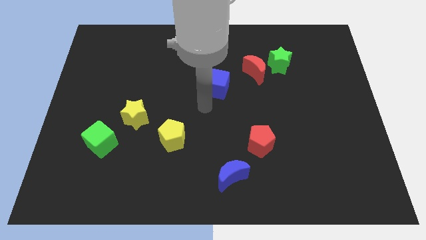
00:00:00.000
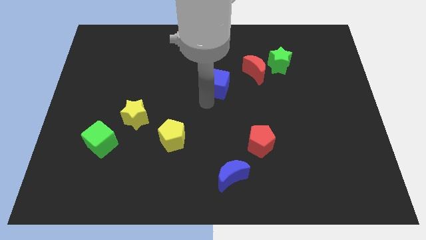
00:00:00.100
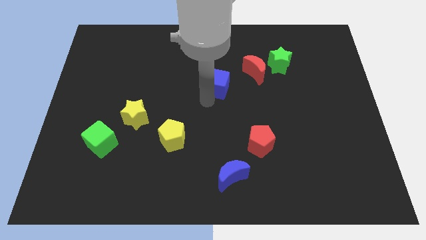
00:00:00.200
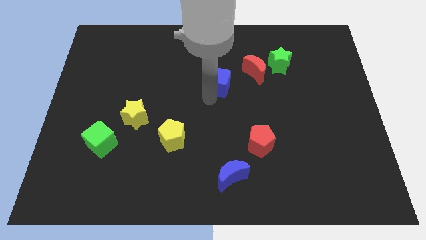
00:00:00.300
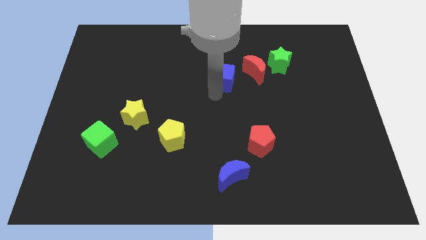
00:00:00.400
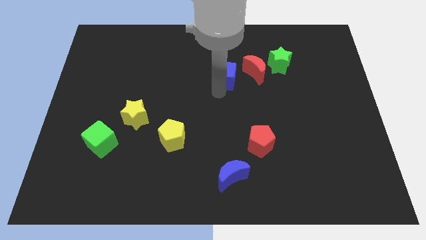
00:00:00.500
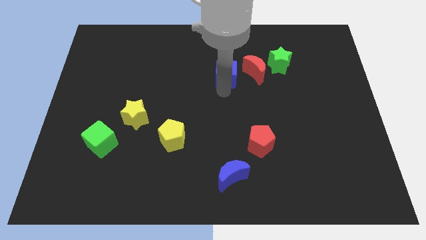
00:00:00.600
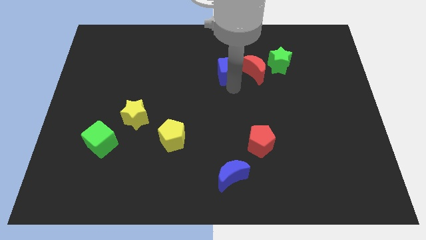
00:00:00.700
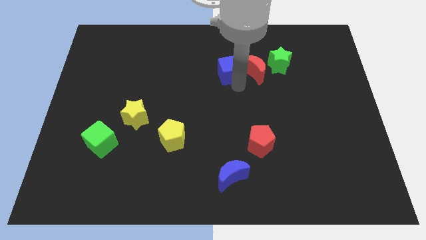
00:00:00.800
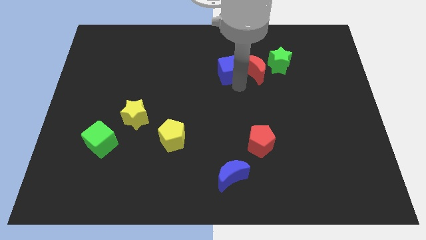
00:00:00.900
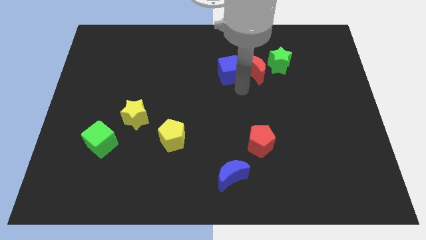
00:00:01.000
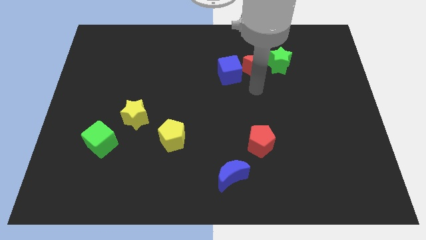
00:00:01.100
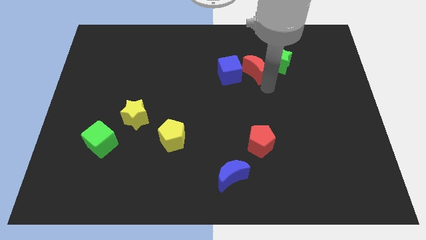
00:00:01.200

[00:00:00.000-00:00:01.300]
move the blue cube to the top left side of the red moon

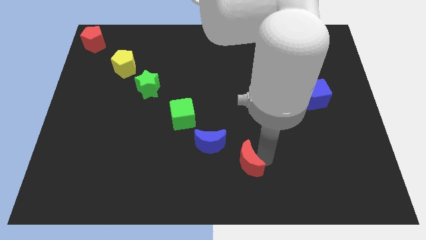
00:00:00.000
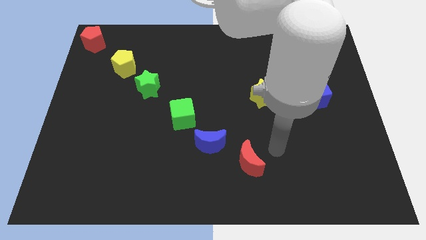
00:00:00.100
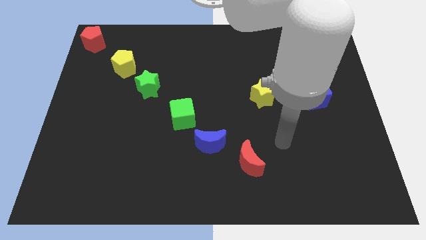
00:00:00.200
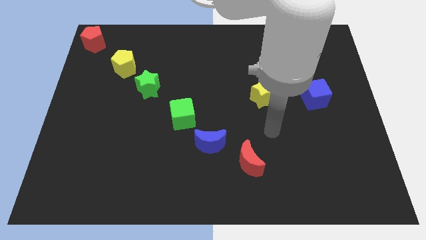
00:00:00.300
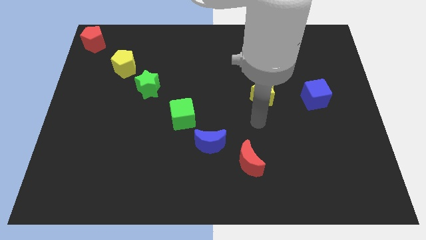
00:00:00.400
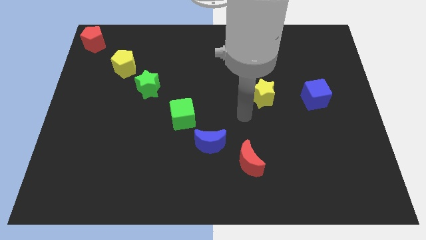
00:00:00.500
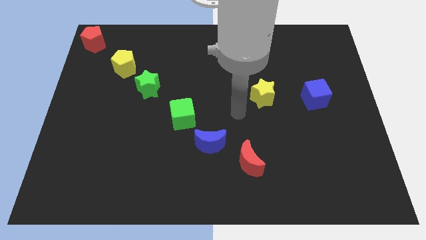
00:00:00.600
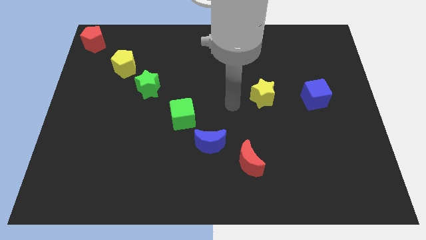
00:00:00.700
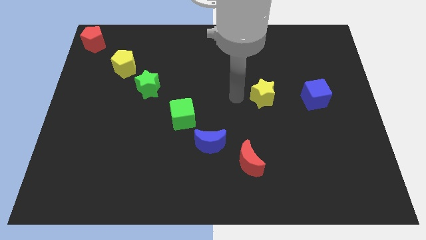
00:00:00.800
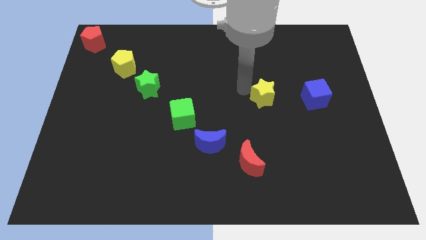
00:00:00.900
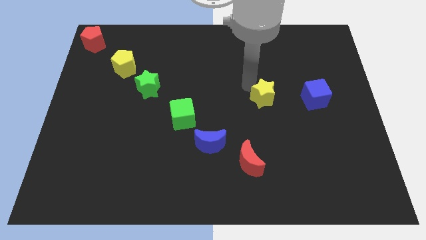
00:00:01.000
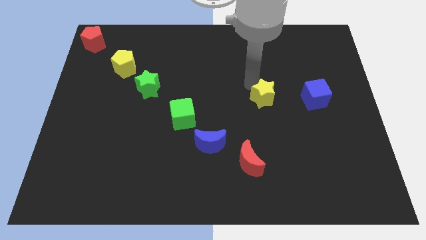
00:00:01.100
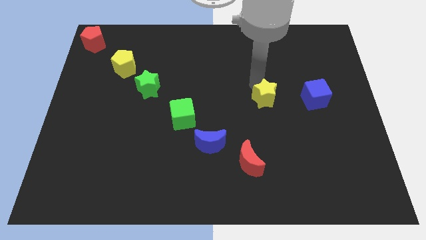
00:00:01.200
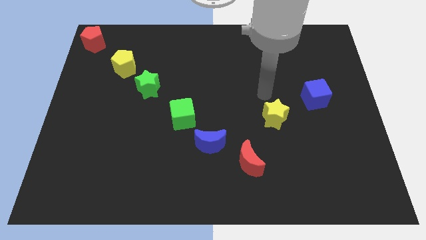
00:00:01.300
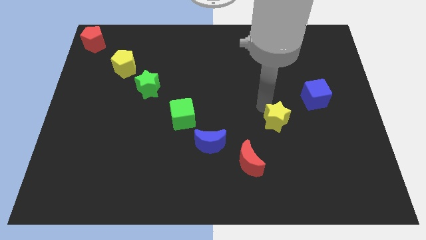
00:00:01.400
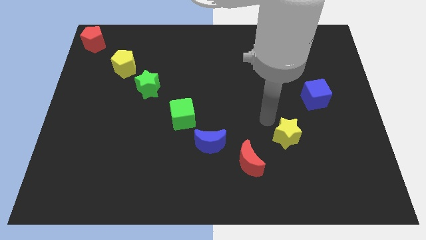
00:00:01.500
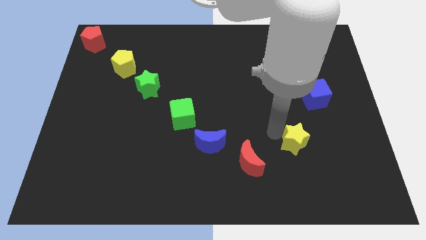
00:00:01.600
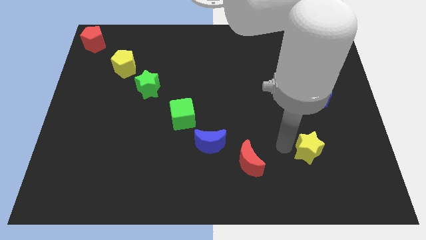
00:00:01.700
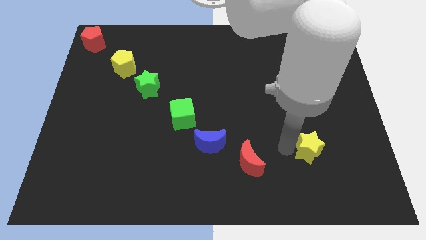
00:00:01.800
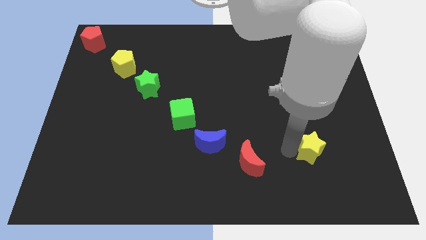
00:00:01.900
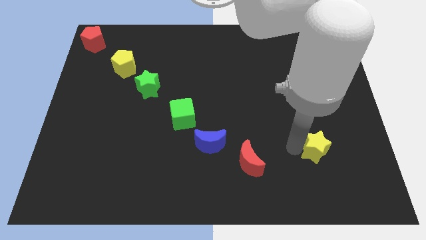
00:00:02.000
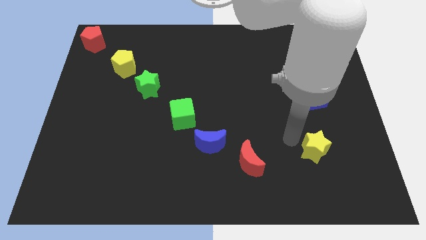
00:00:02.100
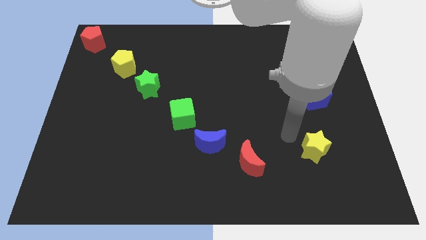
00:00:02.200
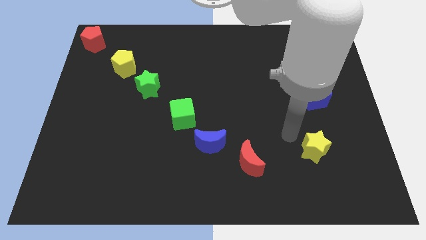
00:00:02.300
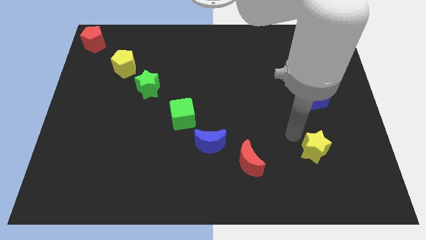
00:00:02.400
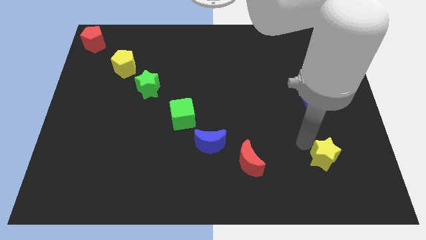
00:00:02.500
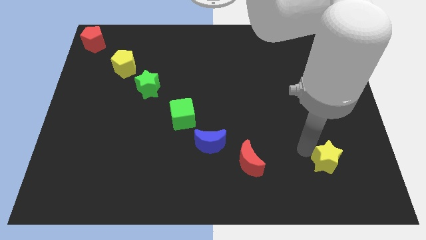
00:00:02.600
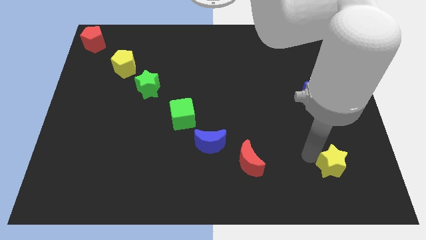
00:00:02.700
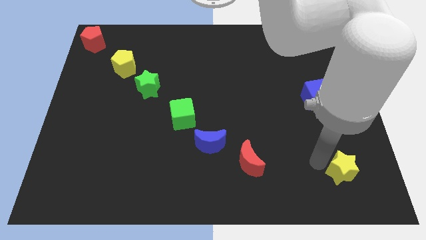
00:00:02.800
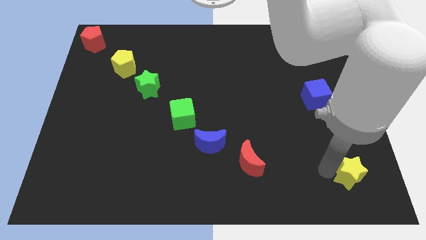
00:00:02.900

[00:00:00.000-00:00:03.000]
push the yellow star to the right of the red crescent

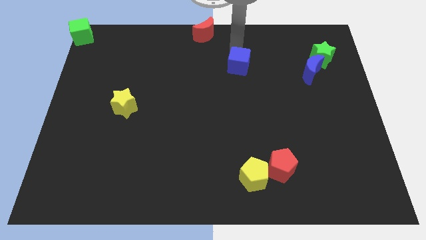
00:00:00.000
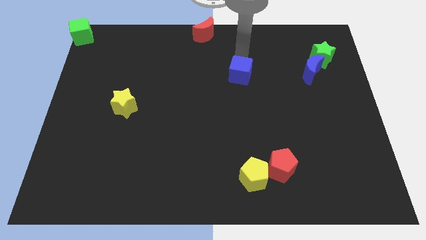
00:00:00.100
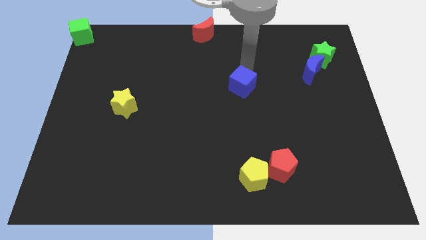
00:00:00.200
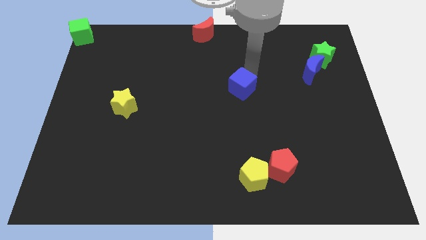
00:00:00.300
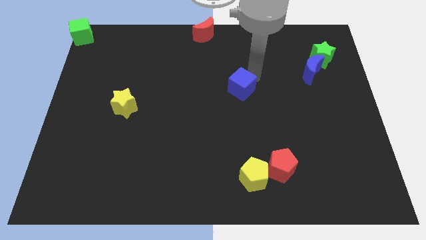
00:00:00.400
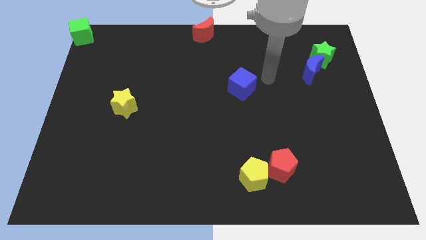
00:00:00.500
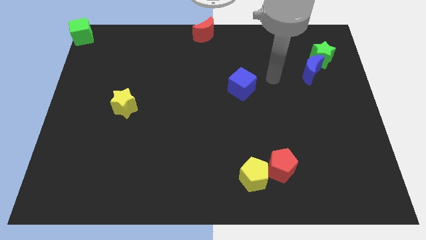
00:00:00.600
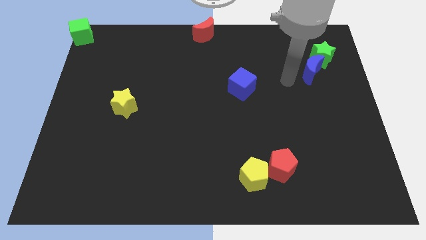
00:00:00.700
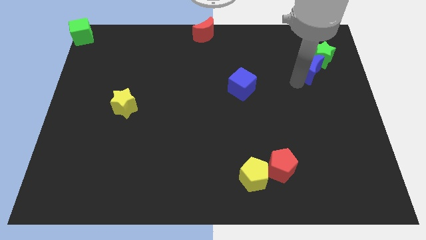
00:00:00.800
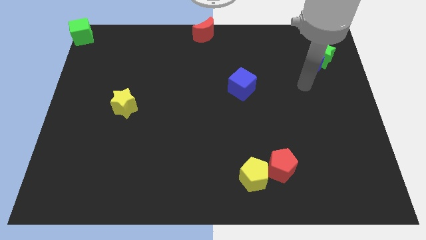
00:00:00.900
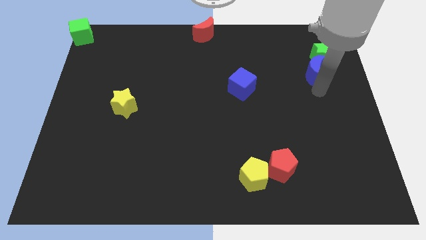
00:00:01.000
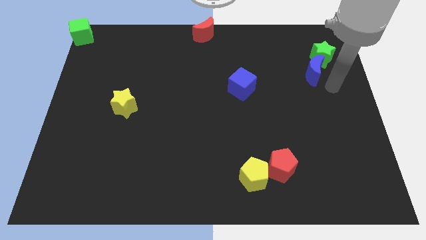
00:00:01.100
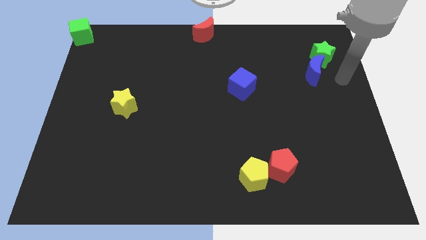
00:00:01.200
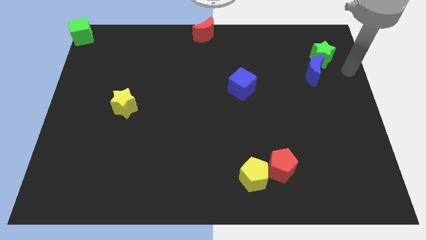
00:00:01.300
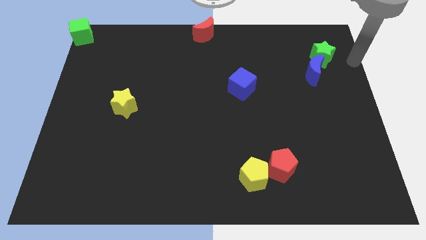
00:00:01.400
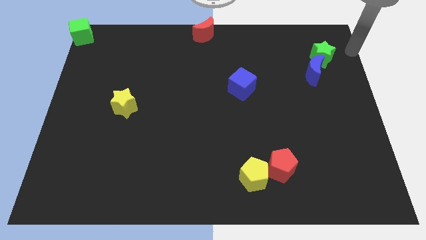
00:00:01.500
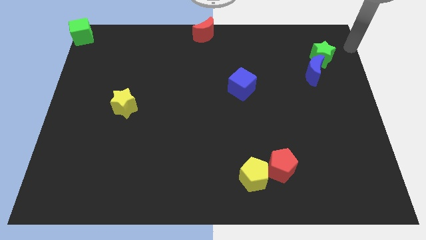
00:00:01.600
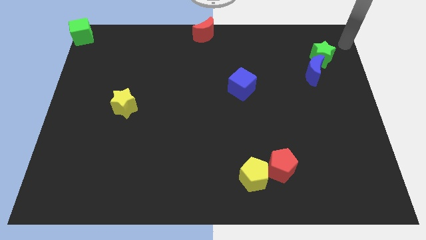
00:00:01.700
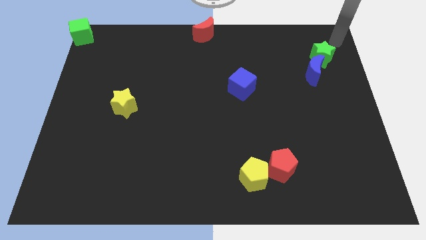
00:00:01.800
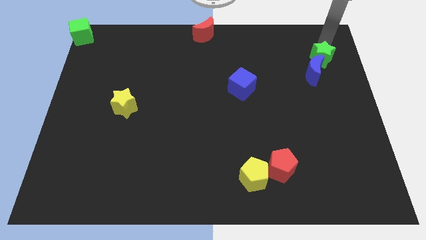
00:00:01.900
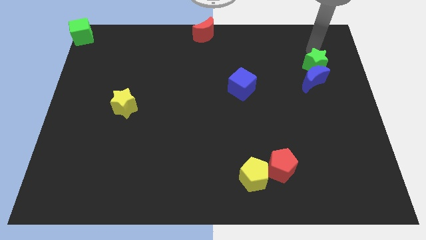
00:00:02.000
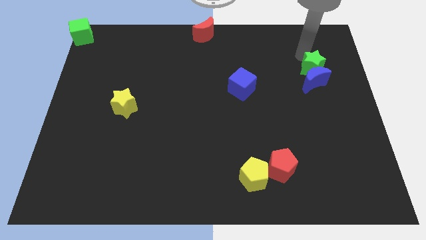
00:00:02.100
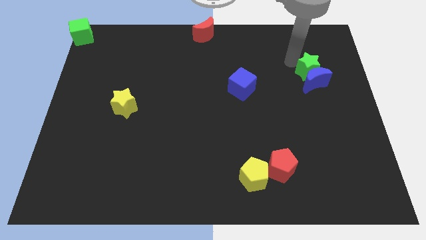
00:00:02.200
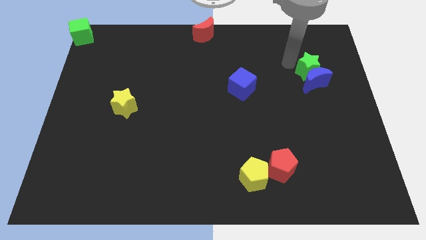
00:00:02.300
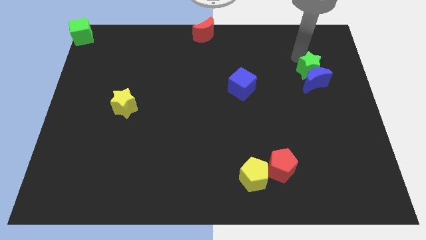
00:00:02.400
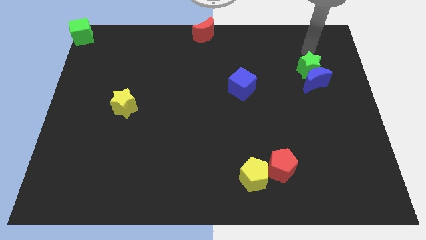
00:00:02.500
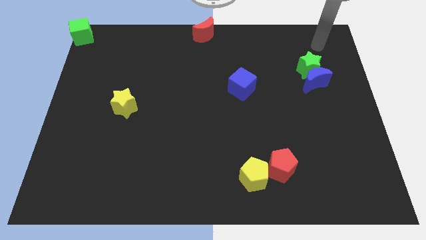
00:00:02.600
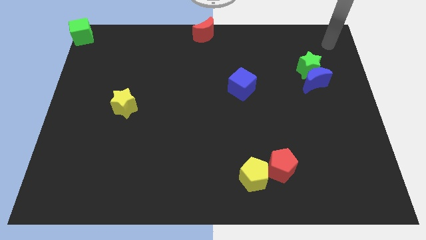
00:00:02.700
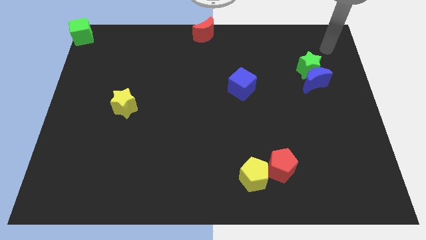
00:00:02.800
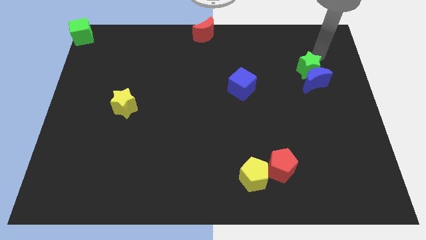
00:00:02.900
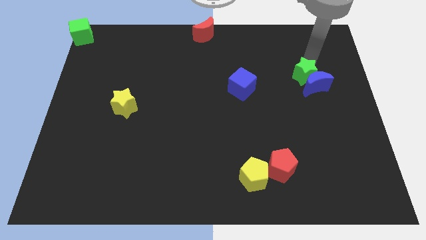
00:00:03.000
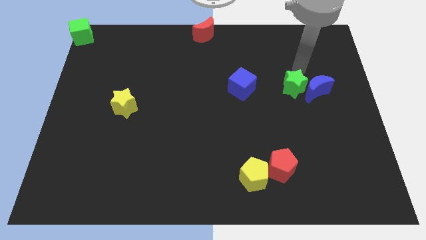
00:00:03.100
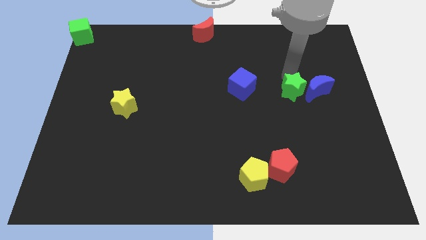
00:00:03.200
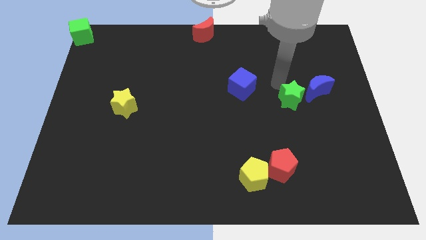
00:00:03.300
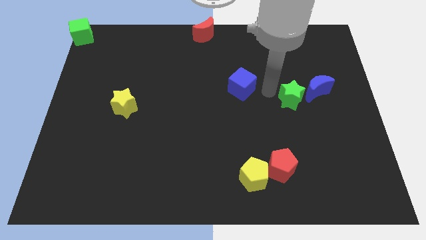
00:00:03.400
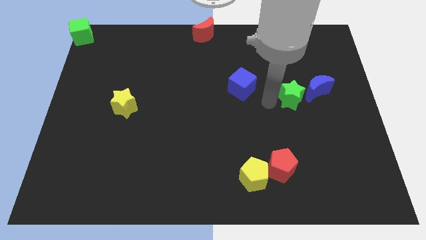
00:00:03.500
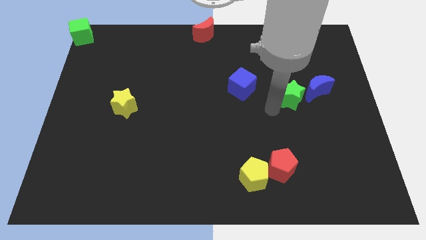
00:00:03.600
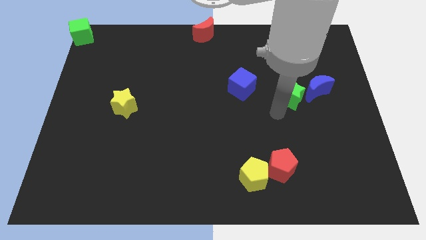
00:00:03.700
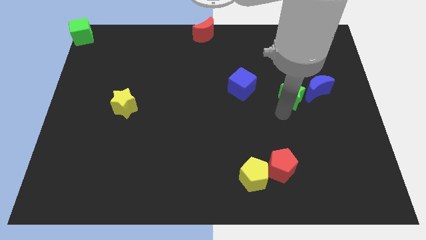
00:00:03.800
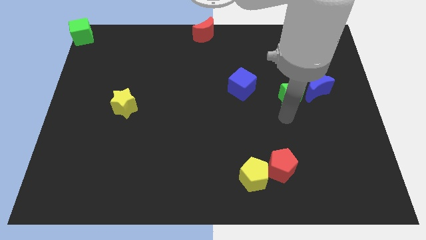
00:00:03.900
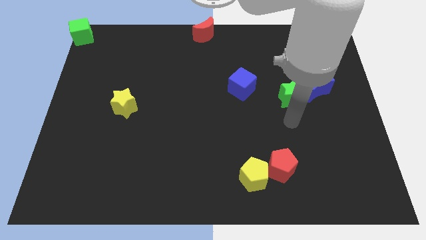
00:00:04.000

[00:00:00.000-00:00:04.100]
move the green star and blue moon slightly down

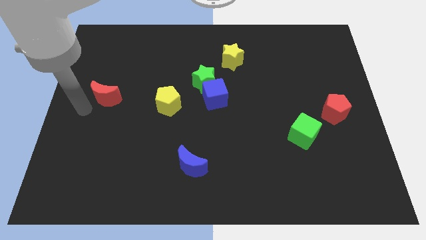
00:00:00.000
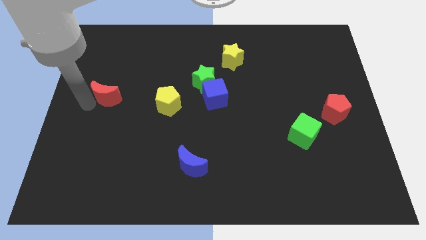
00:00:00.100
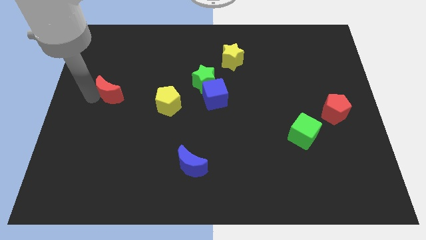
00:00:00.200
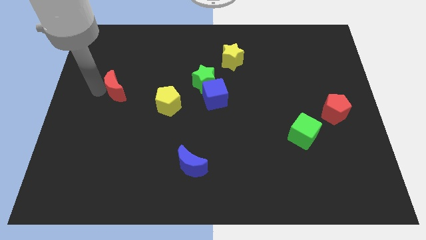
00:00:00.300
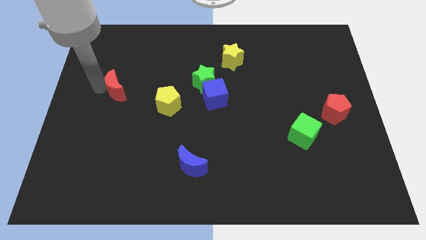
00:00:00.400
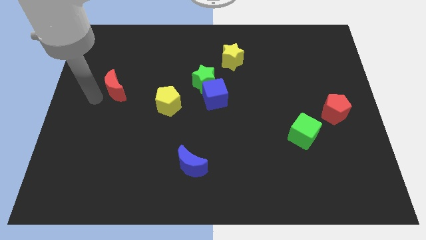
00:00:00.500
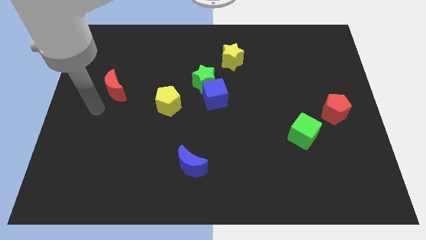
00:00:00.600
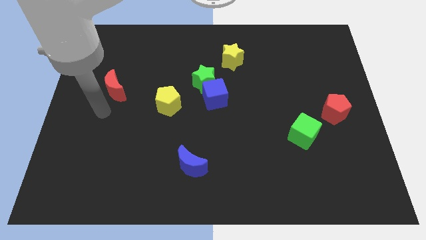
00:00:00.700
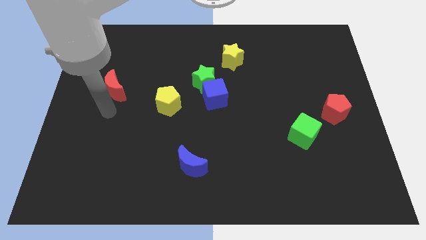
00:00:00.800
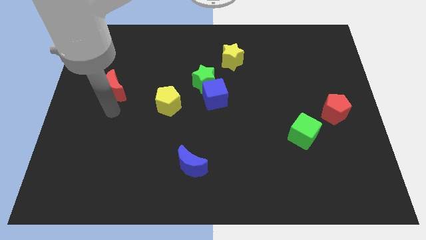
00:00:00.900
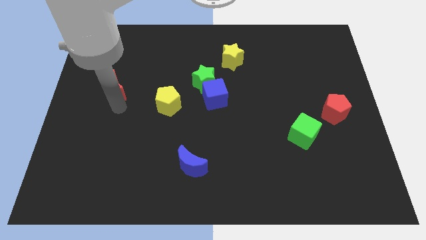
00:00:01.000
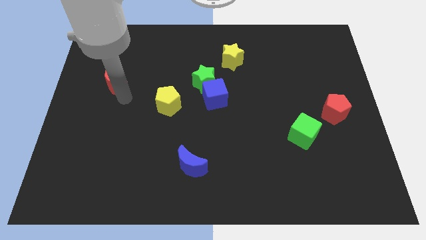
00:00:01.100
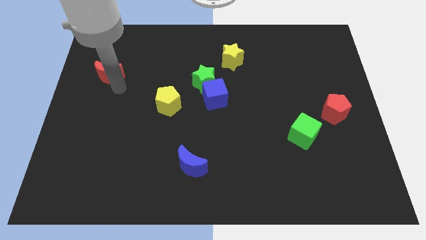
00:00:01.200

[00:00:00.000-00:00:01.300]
move the red moon slightly up
